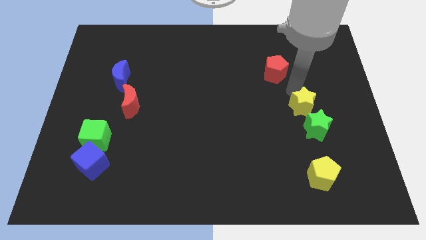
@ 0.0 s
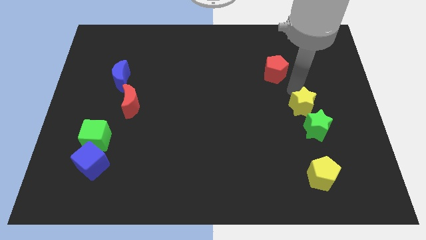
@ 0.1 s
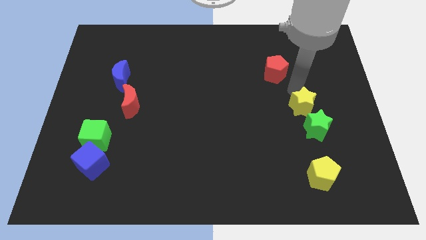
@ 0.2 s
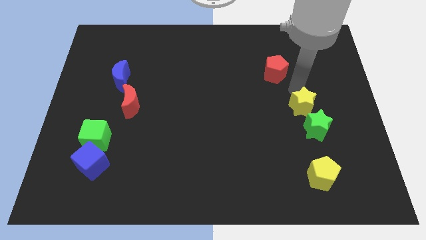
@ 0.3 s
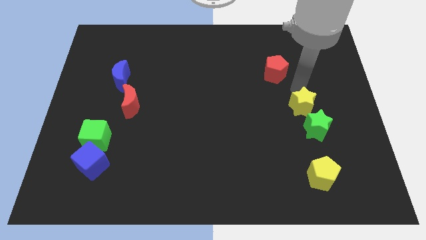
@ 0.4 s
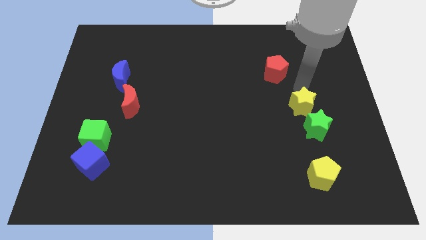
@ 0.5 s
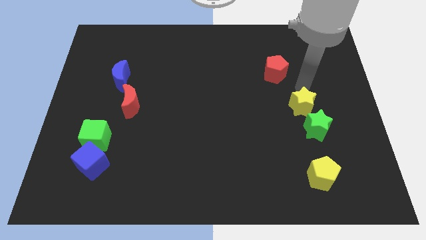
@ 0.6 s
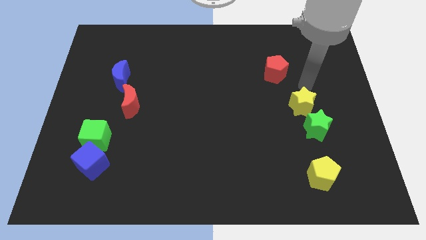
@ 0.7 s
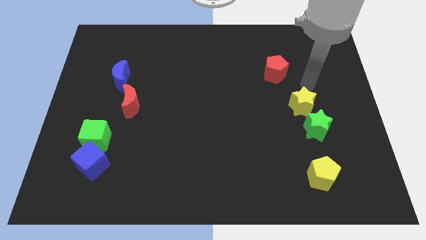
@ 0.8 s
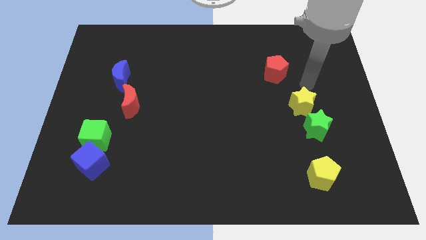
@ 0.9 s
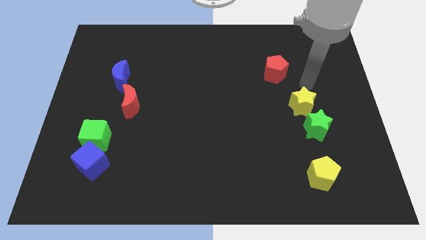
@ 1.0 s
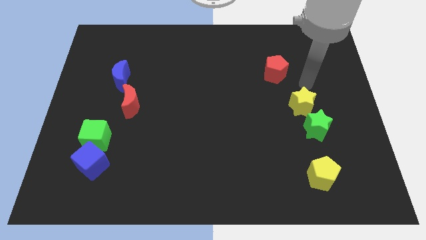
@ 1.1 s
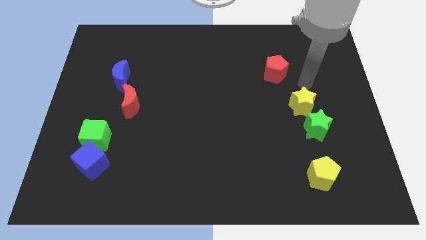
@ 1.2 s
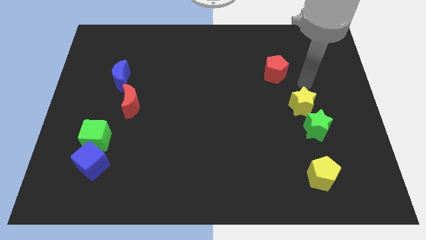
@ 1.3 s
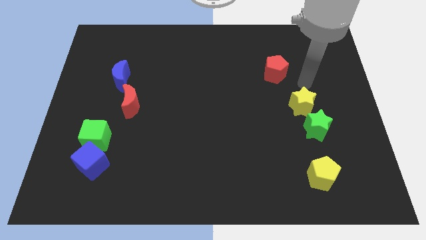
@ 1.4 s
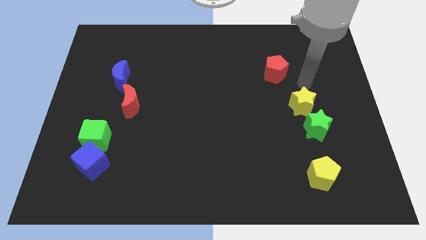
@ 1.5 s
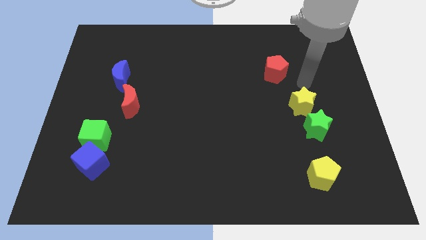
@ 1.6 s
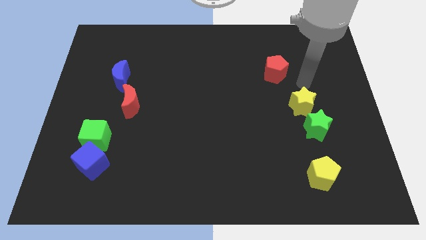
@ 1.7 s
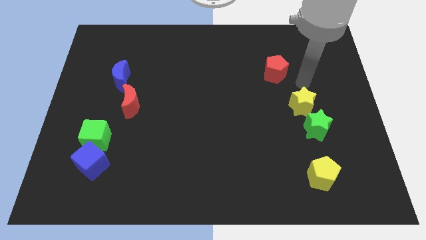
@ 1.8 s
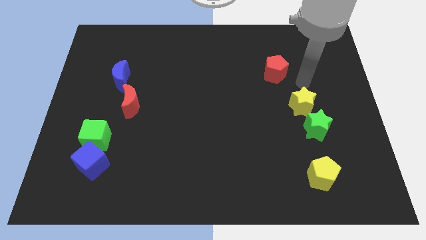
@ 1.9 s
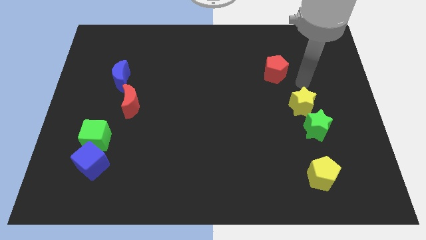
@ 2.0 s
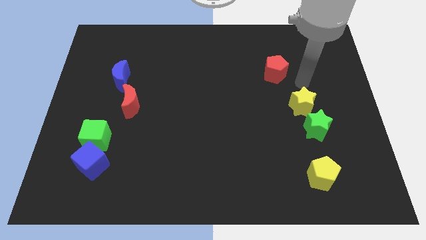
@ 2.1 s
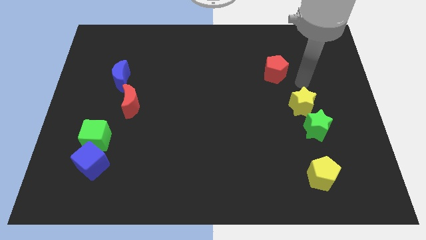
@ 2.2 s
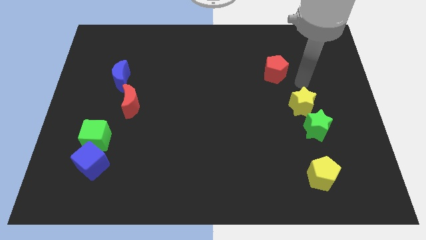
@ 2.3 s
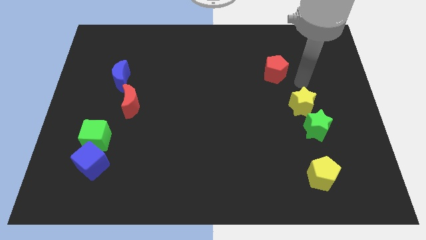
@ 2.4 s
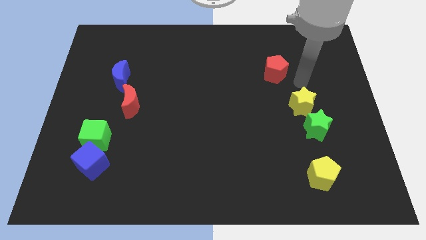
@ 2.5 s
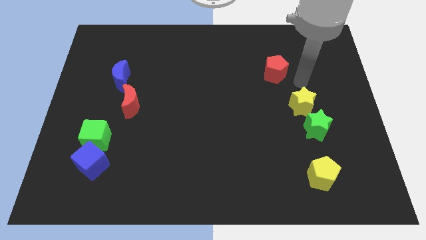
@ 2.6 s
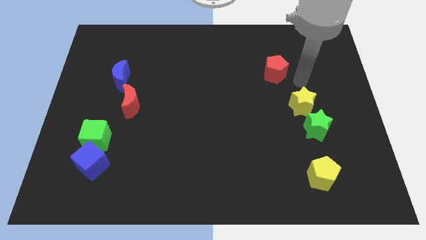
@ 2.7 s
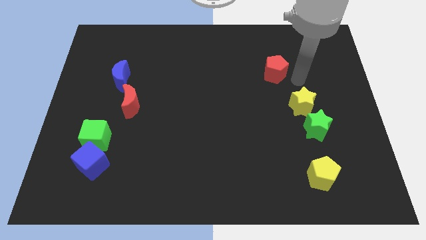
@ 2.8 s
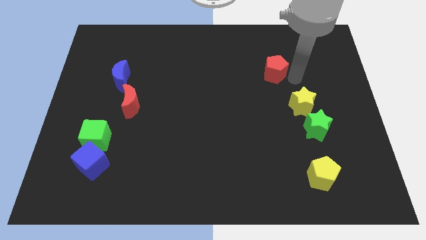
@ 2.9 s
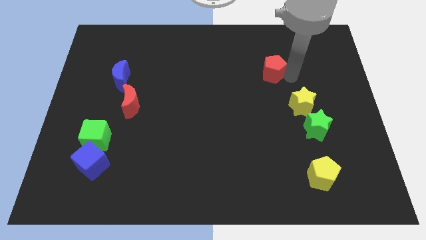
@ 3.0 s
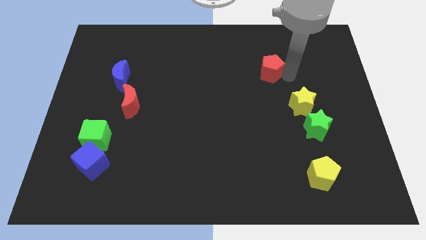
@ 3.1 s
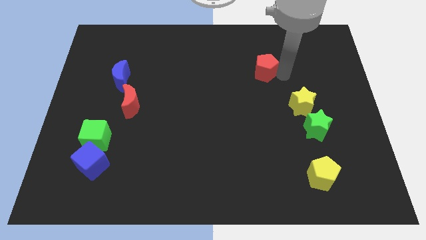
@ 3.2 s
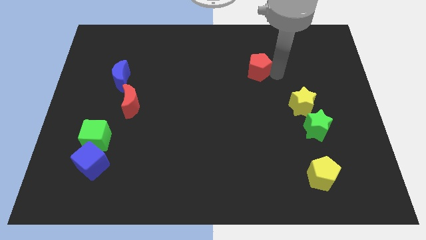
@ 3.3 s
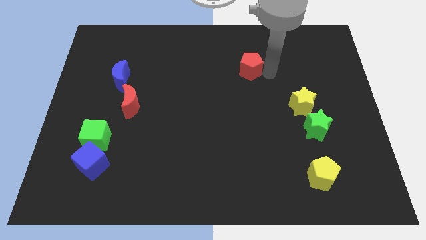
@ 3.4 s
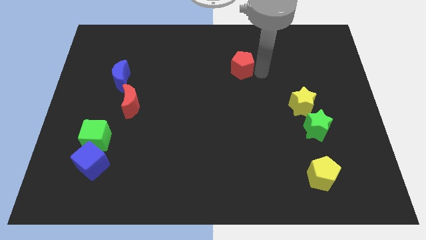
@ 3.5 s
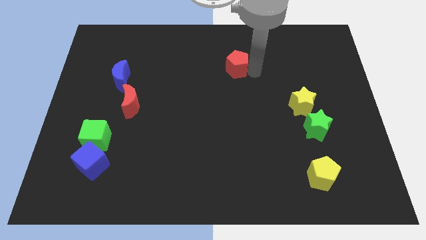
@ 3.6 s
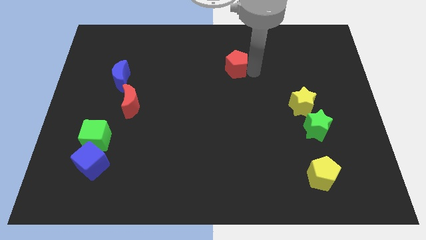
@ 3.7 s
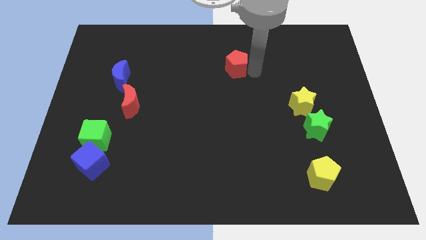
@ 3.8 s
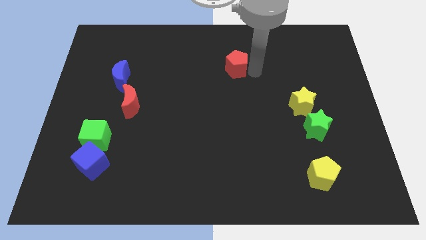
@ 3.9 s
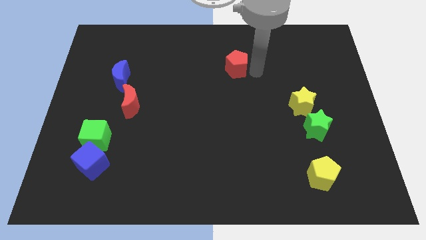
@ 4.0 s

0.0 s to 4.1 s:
move the red pentagon to the centre of the board

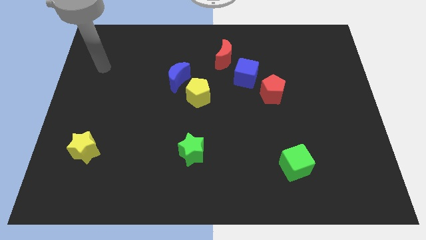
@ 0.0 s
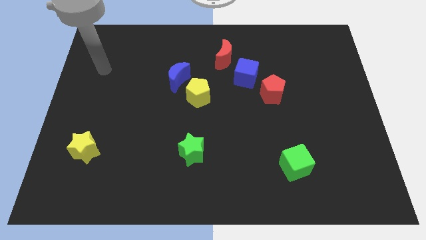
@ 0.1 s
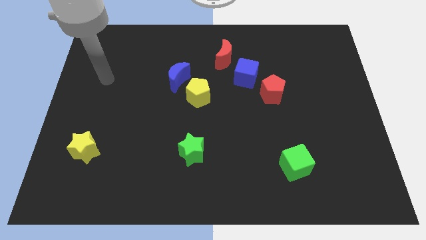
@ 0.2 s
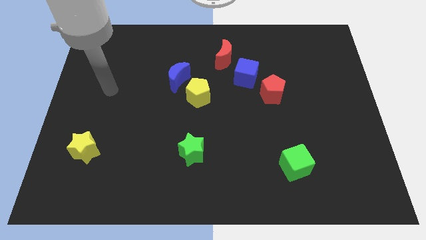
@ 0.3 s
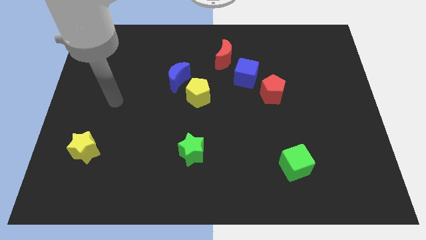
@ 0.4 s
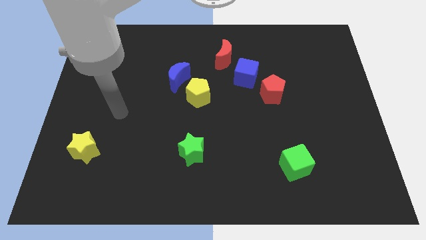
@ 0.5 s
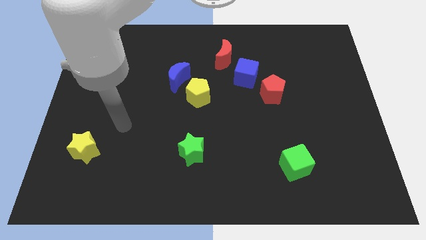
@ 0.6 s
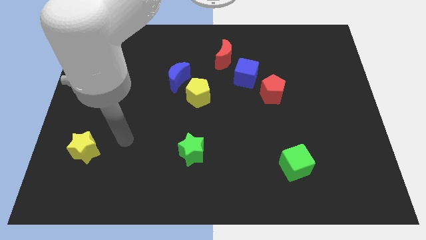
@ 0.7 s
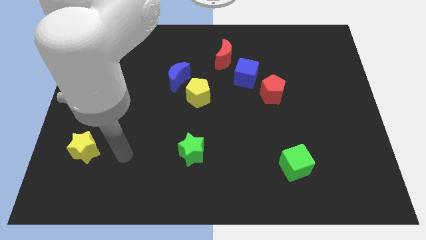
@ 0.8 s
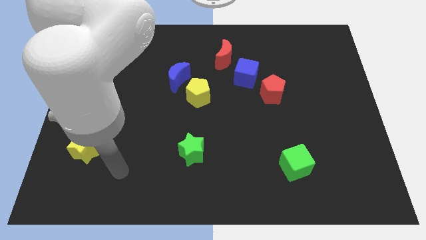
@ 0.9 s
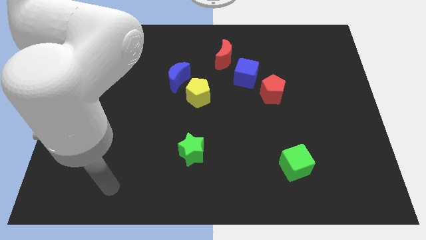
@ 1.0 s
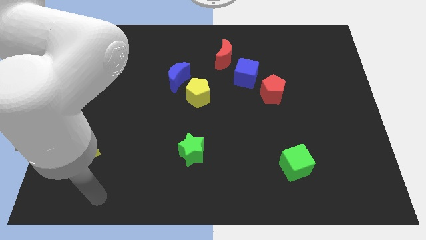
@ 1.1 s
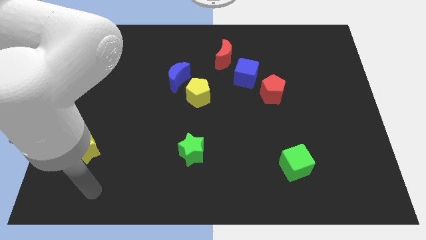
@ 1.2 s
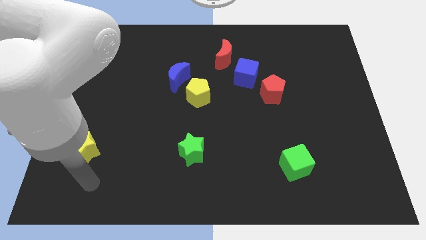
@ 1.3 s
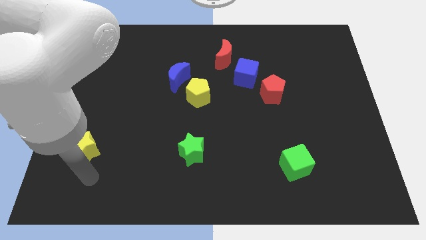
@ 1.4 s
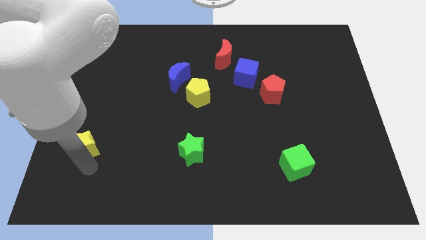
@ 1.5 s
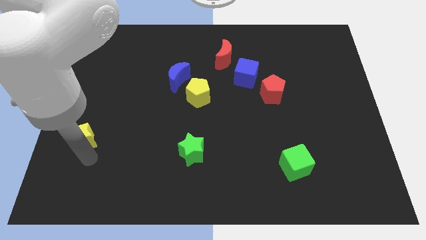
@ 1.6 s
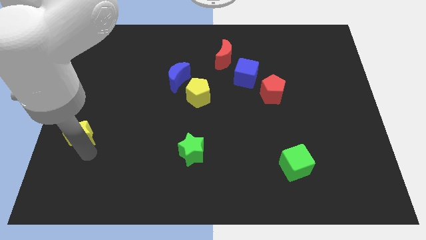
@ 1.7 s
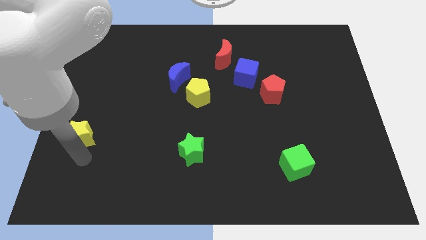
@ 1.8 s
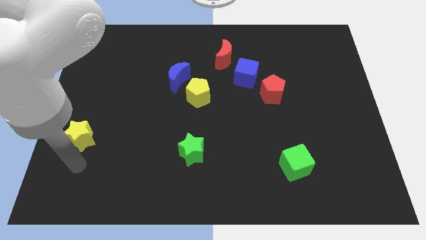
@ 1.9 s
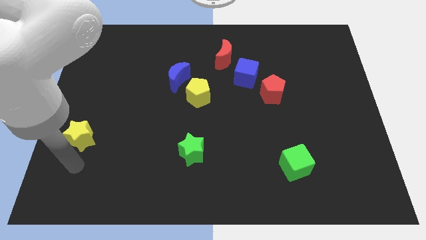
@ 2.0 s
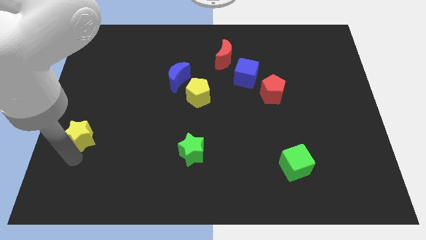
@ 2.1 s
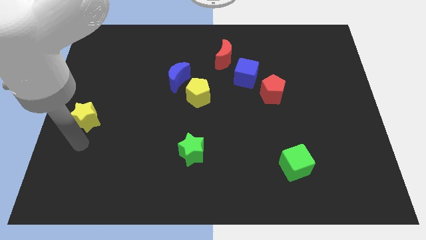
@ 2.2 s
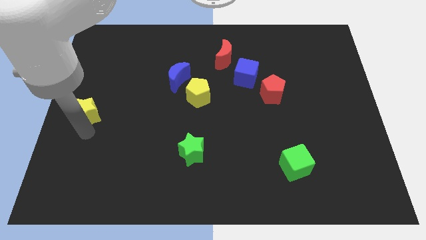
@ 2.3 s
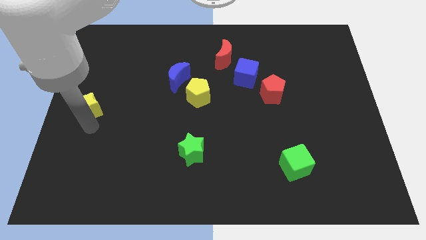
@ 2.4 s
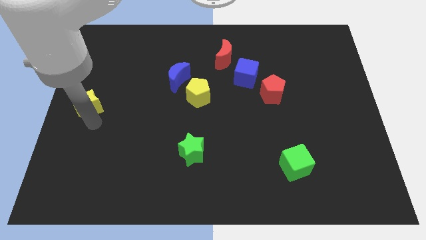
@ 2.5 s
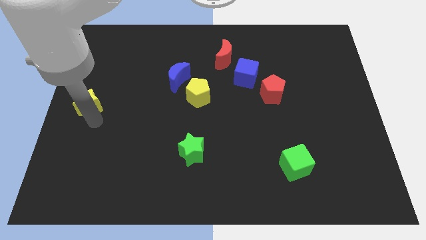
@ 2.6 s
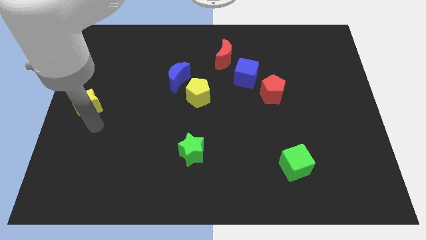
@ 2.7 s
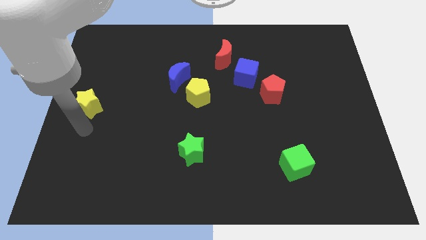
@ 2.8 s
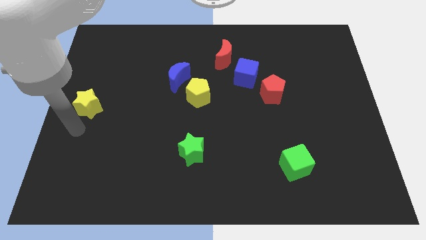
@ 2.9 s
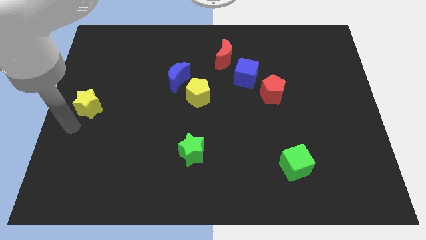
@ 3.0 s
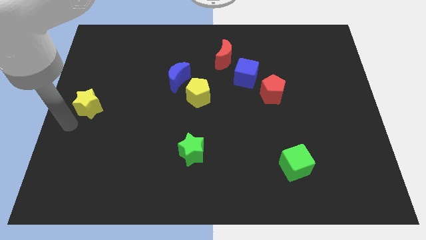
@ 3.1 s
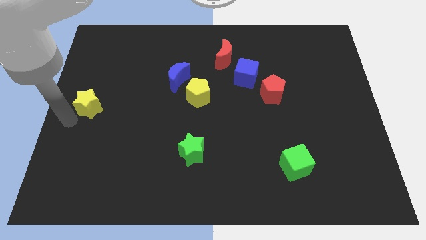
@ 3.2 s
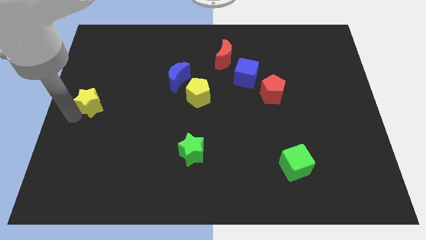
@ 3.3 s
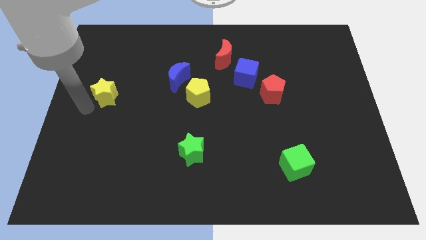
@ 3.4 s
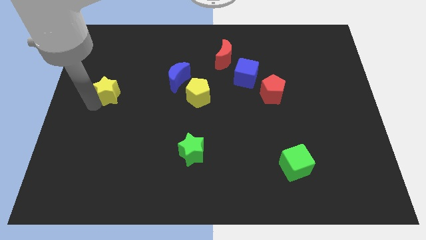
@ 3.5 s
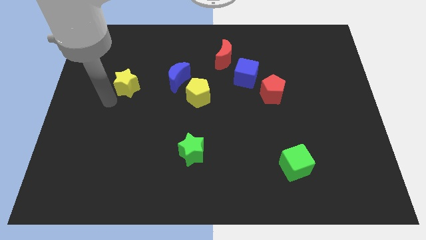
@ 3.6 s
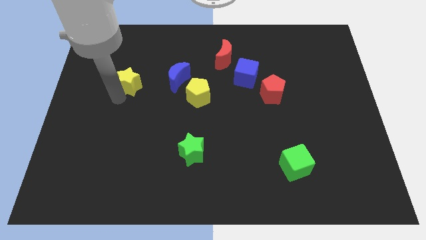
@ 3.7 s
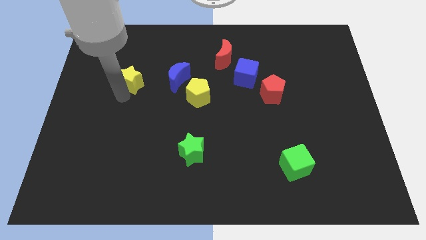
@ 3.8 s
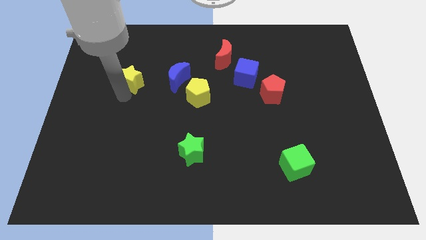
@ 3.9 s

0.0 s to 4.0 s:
push the yellow star left to the blue crescent

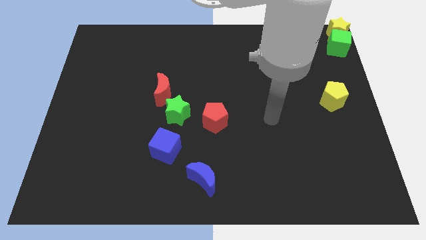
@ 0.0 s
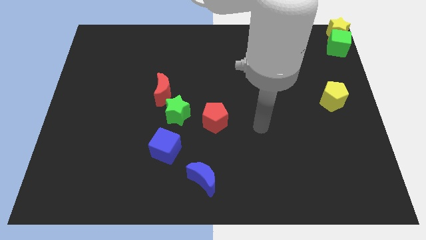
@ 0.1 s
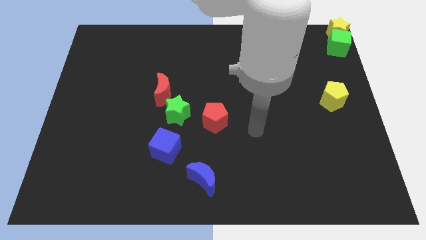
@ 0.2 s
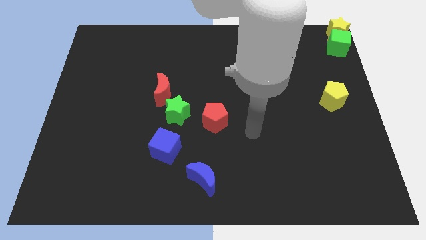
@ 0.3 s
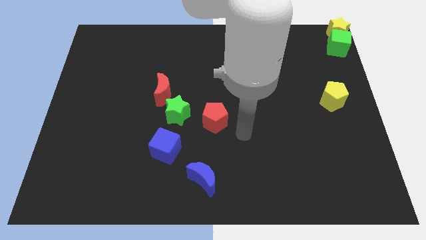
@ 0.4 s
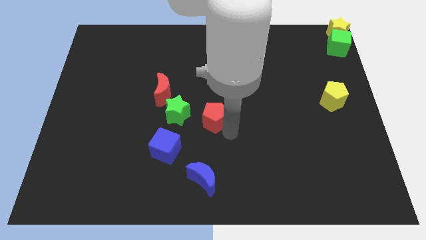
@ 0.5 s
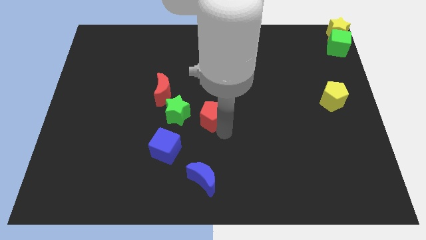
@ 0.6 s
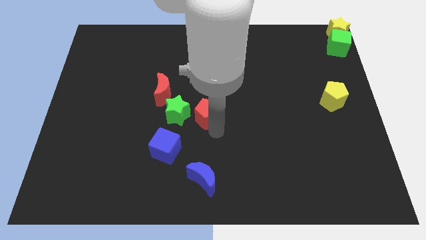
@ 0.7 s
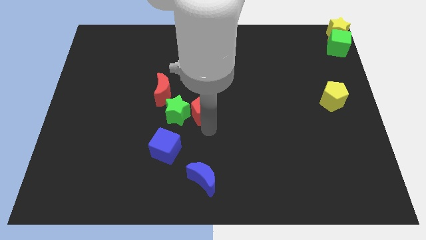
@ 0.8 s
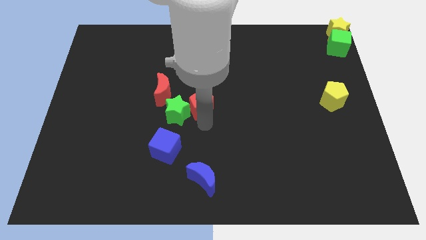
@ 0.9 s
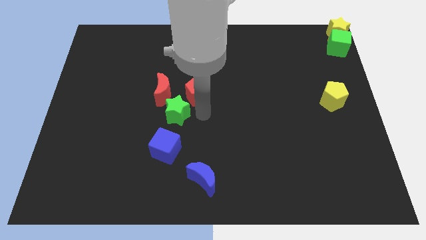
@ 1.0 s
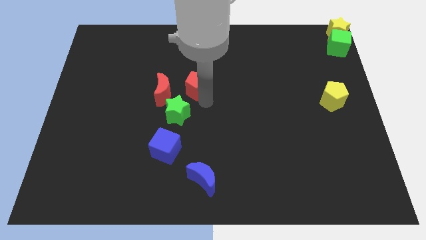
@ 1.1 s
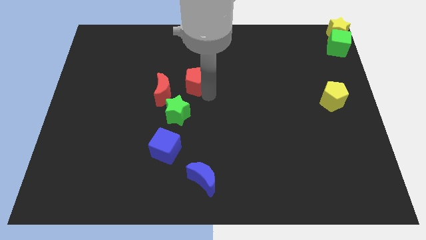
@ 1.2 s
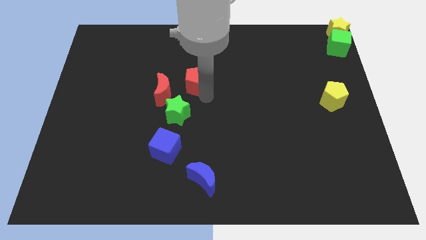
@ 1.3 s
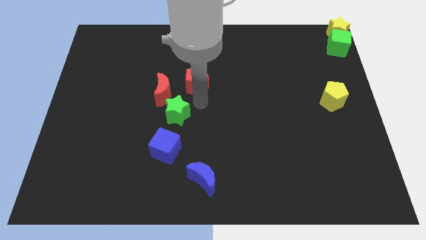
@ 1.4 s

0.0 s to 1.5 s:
place the red pentagon right to the red moon
